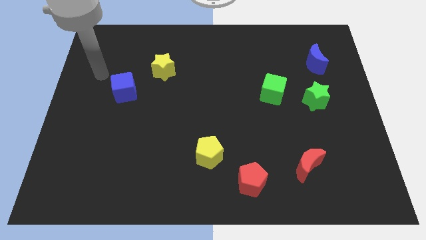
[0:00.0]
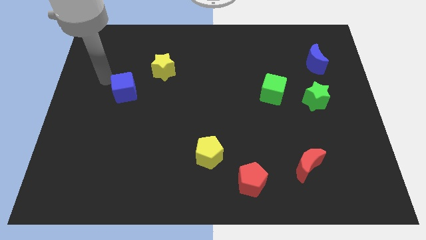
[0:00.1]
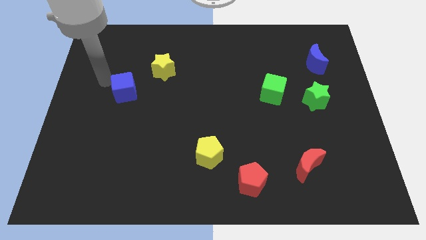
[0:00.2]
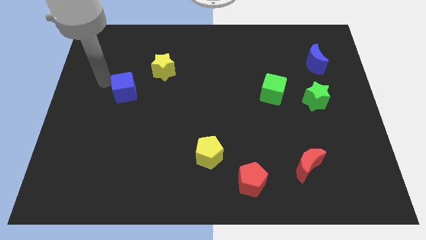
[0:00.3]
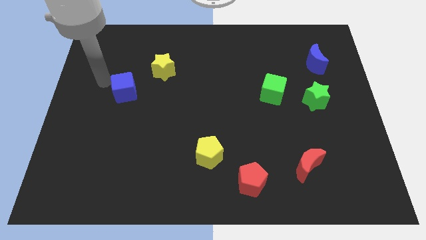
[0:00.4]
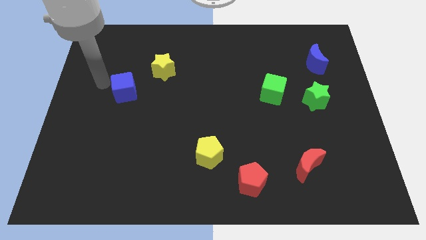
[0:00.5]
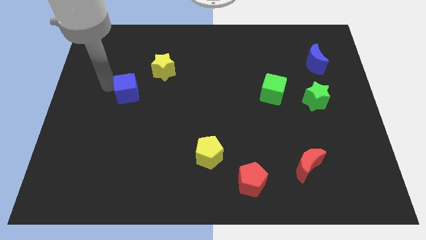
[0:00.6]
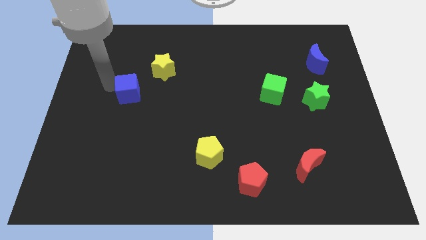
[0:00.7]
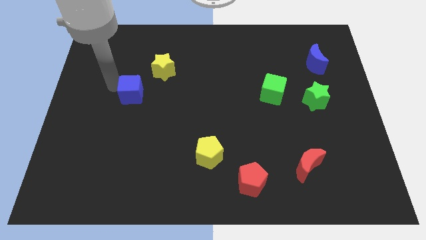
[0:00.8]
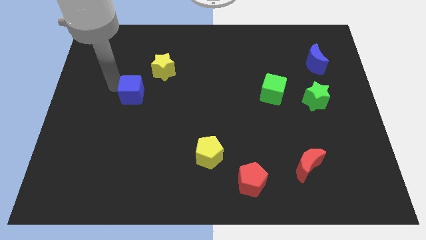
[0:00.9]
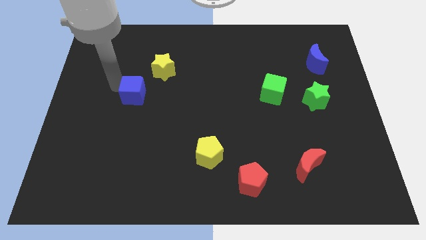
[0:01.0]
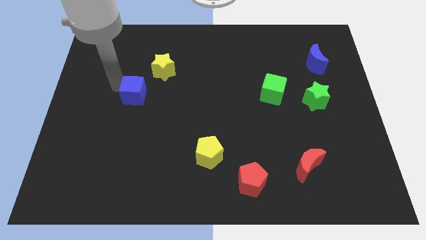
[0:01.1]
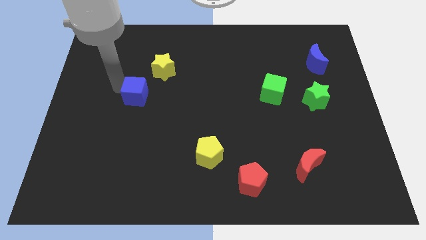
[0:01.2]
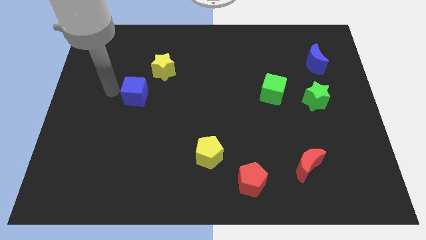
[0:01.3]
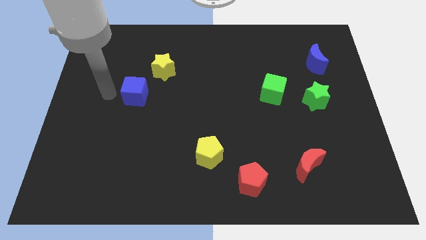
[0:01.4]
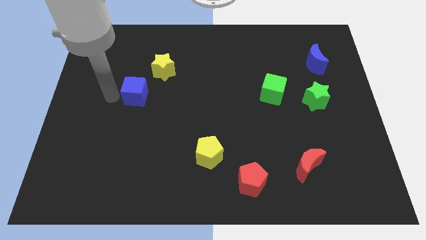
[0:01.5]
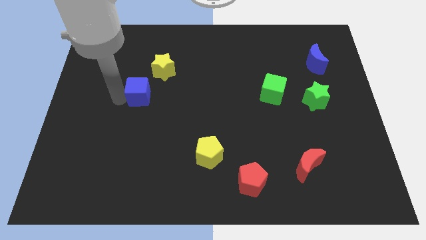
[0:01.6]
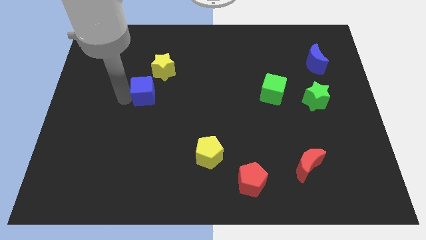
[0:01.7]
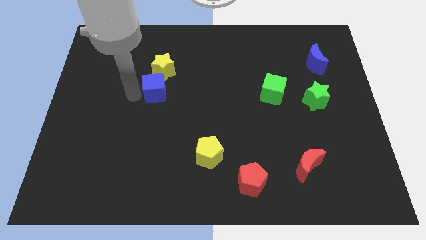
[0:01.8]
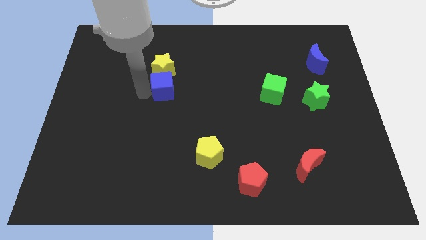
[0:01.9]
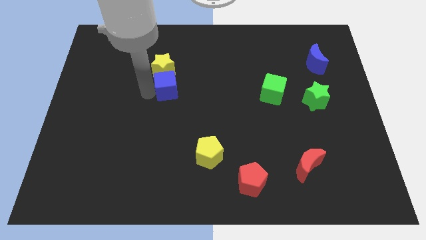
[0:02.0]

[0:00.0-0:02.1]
push blue cube below yellow star

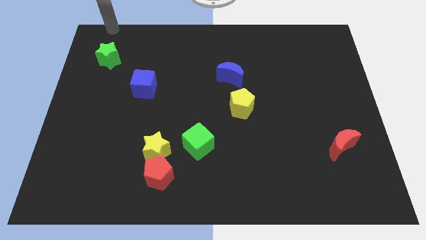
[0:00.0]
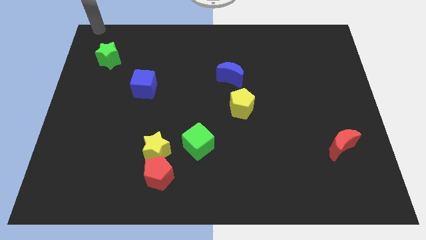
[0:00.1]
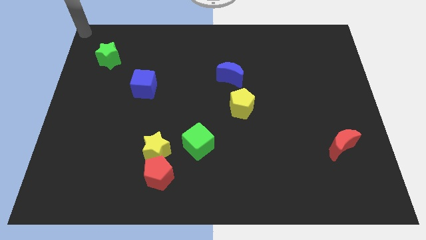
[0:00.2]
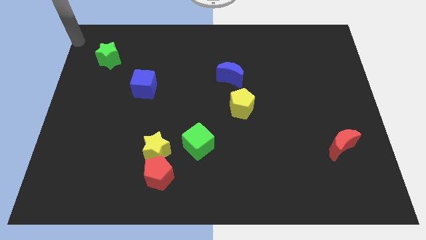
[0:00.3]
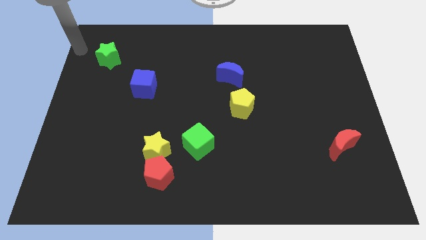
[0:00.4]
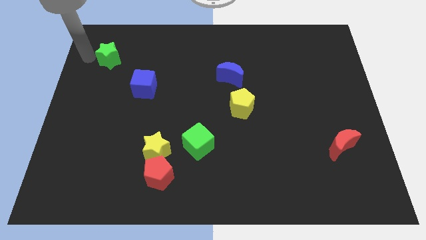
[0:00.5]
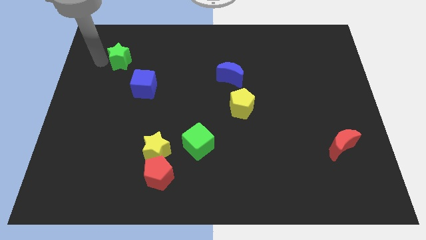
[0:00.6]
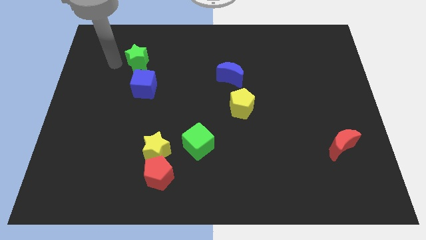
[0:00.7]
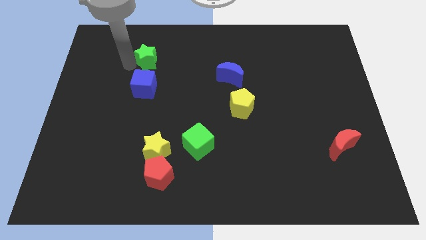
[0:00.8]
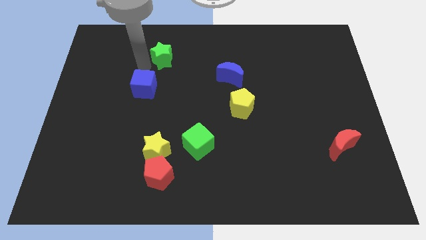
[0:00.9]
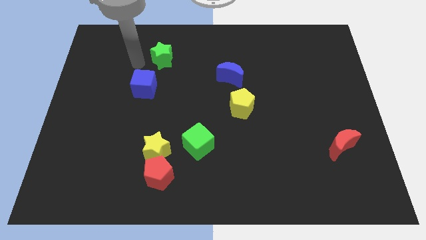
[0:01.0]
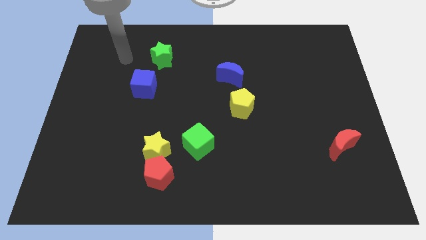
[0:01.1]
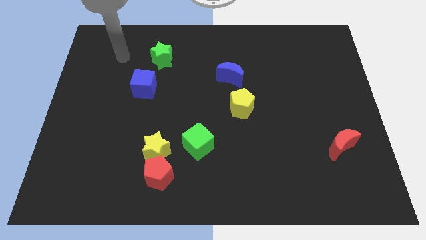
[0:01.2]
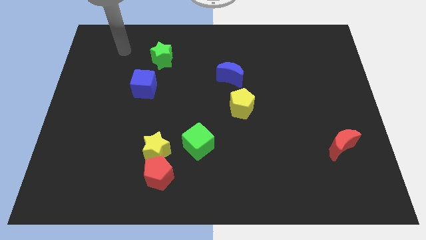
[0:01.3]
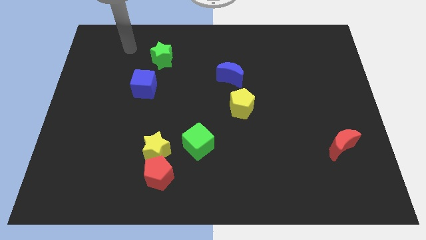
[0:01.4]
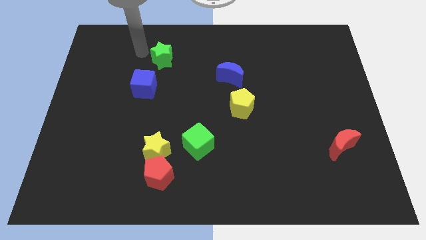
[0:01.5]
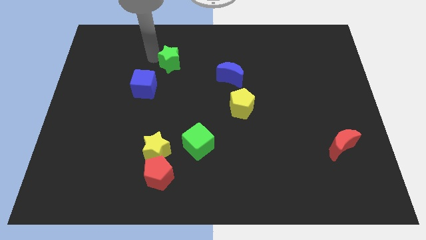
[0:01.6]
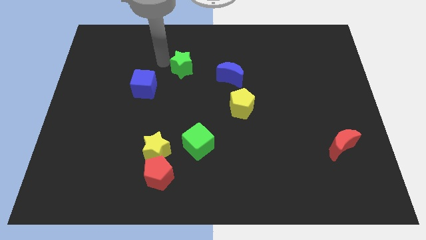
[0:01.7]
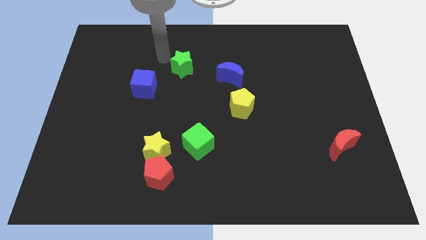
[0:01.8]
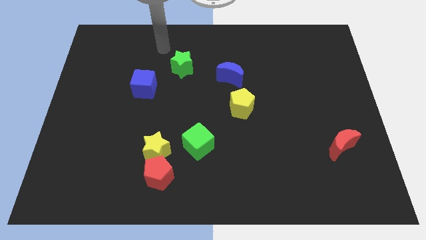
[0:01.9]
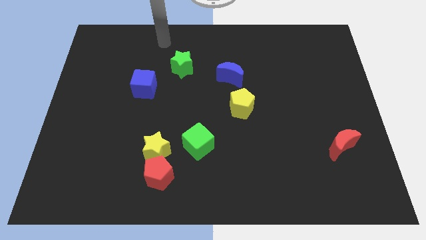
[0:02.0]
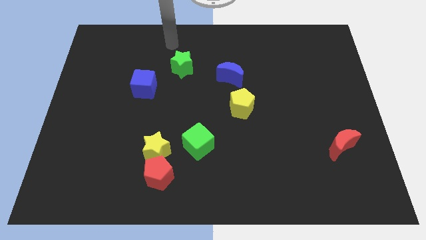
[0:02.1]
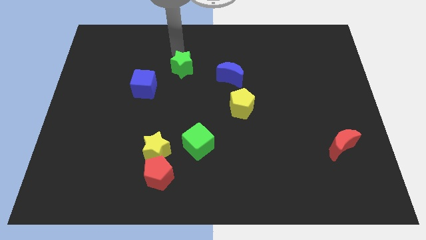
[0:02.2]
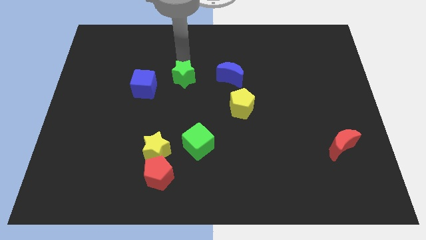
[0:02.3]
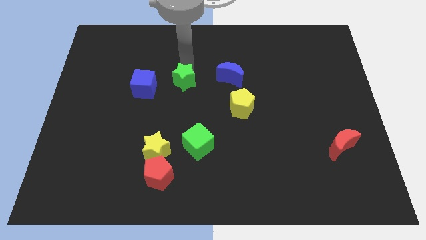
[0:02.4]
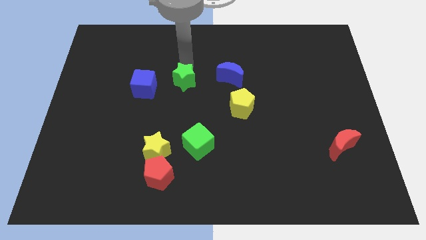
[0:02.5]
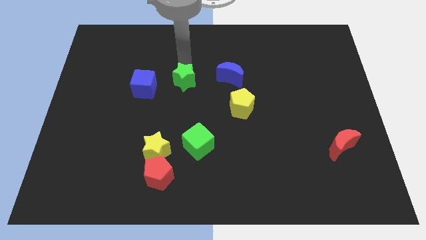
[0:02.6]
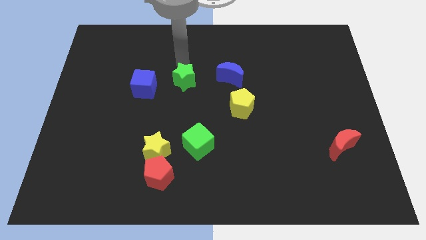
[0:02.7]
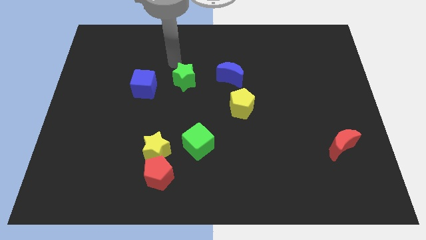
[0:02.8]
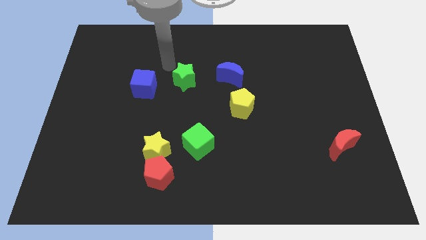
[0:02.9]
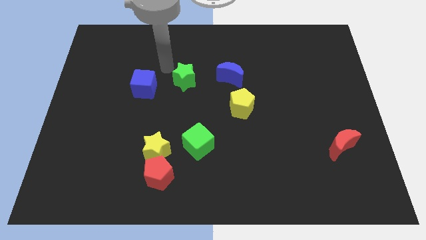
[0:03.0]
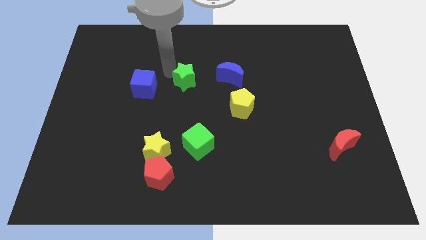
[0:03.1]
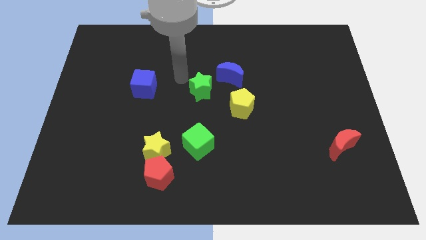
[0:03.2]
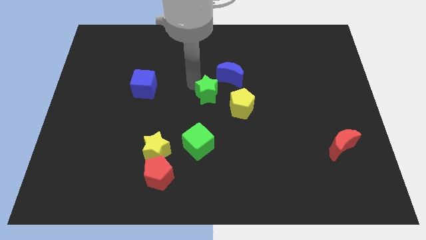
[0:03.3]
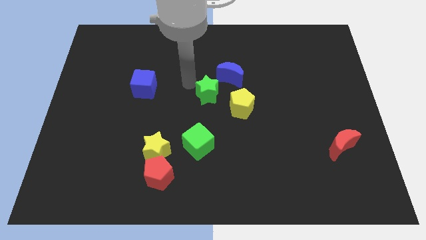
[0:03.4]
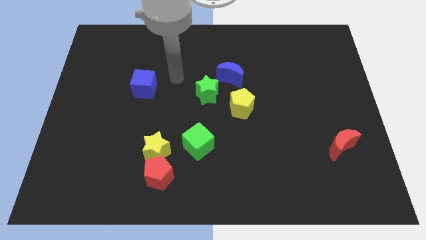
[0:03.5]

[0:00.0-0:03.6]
place the green star at the top of the yellow pentagon

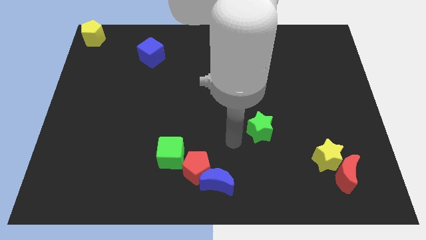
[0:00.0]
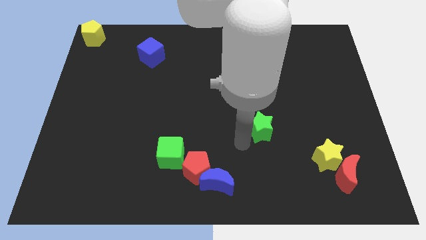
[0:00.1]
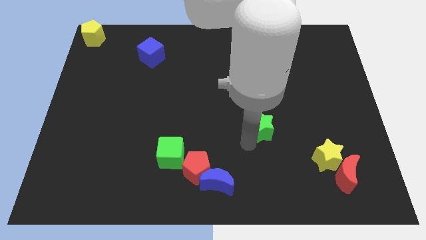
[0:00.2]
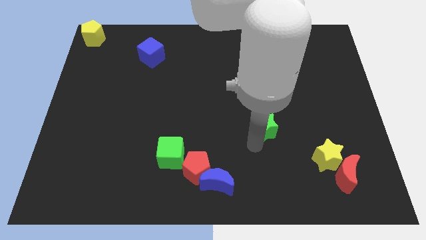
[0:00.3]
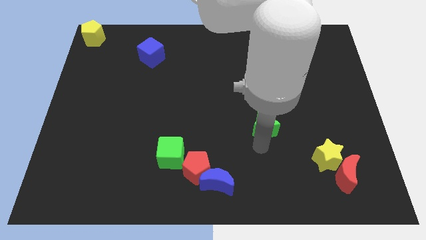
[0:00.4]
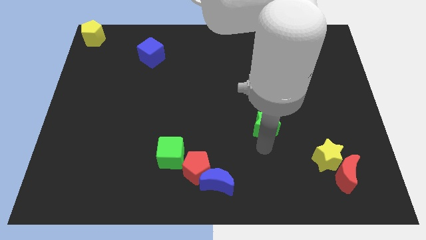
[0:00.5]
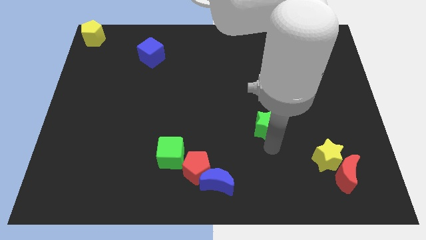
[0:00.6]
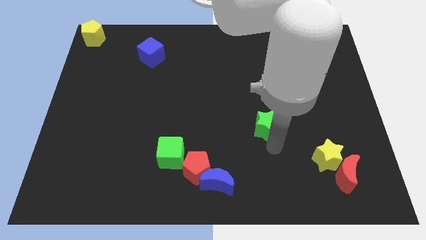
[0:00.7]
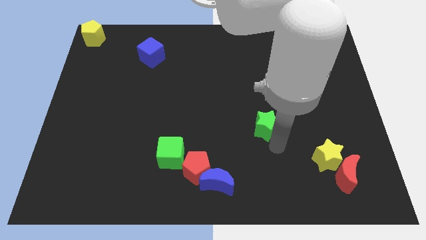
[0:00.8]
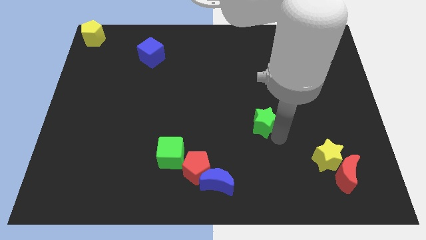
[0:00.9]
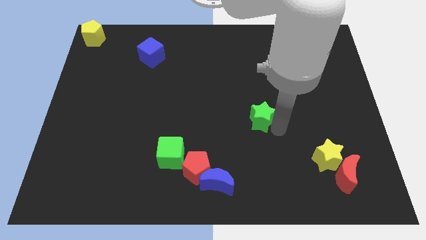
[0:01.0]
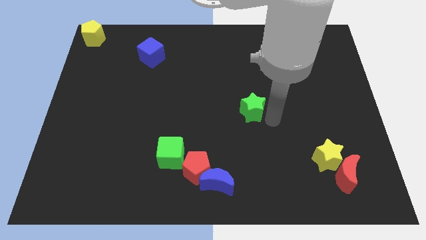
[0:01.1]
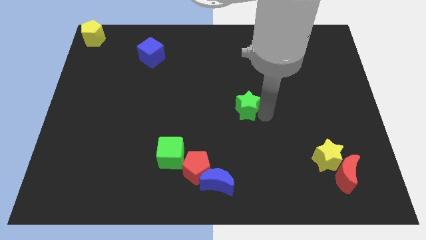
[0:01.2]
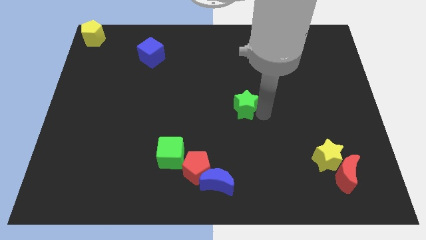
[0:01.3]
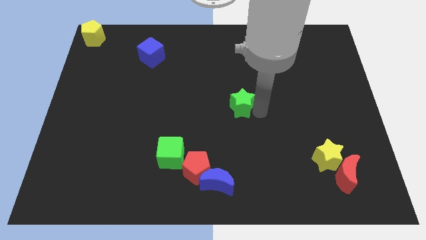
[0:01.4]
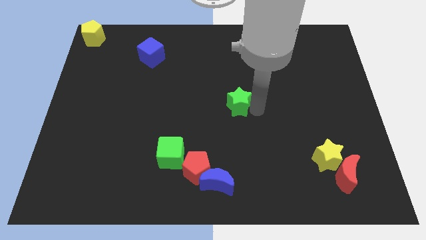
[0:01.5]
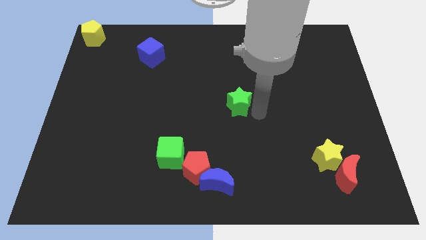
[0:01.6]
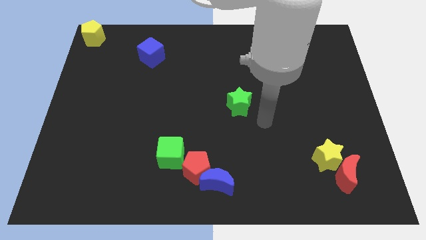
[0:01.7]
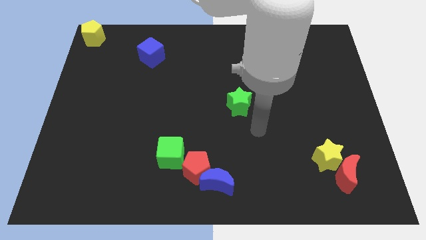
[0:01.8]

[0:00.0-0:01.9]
push the green star towards the top side of the board

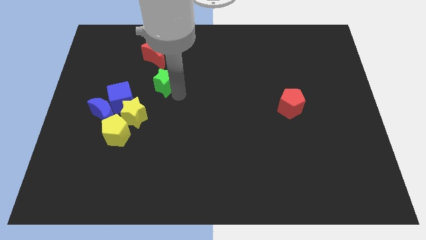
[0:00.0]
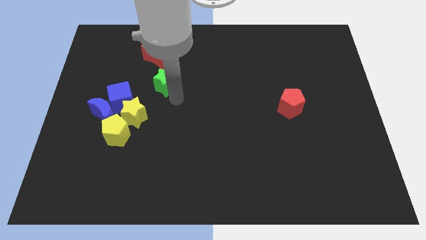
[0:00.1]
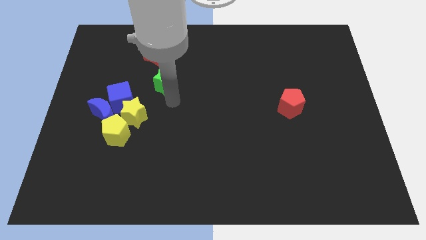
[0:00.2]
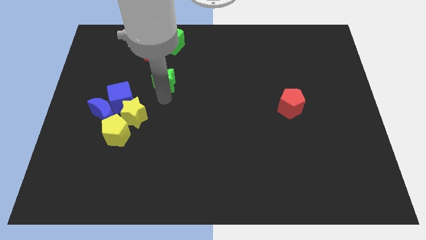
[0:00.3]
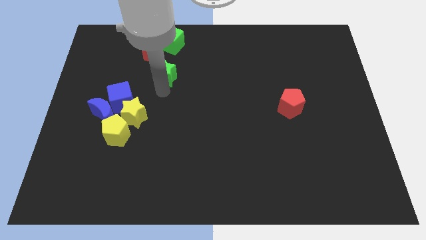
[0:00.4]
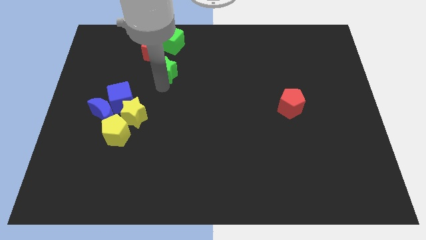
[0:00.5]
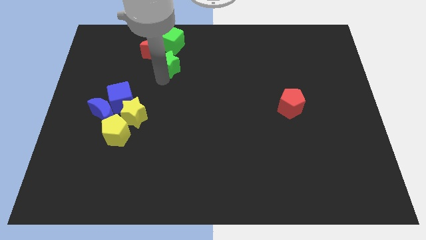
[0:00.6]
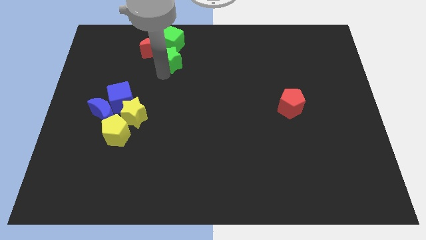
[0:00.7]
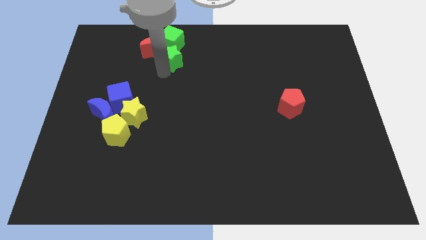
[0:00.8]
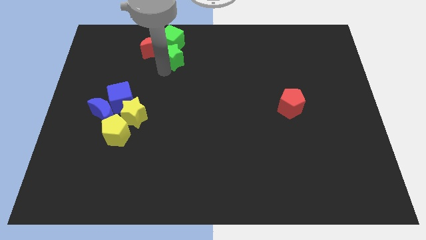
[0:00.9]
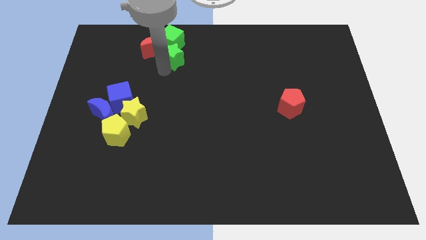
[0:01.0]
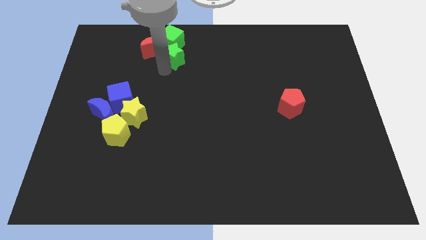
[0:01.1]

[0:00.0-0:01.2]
place the green star below the green cube

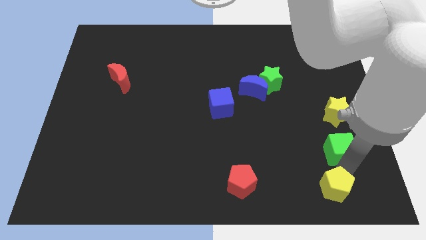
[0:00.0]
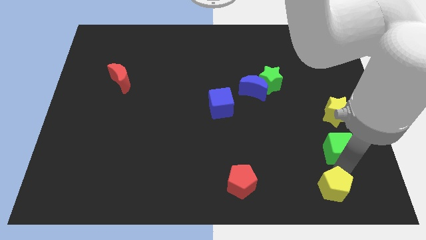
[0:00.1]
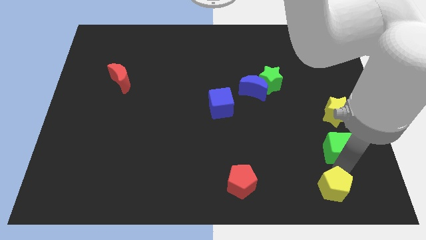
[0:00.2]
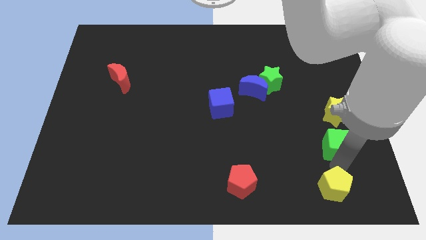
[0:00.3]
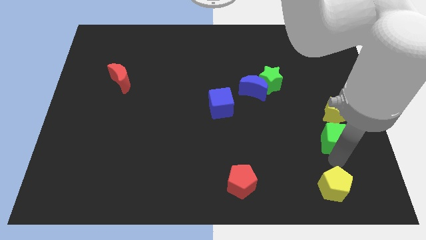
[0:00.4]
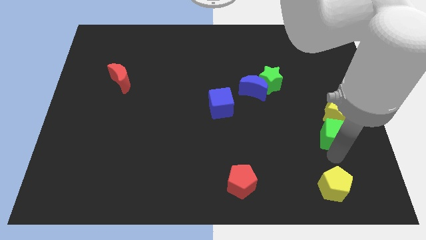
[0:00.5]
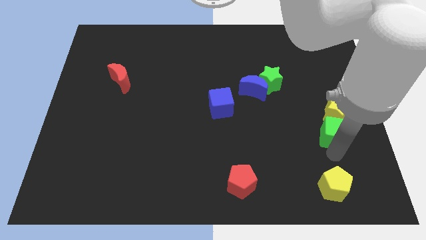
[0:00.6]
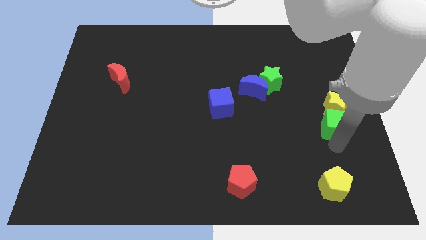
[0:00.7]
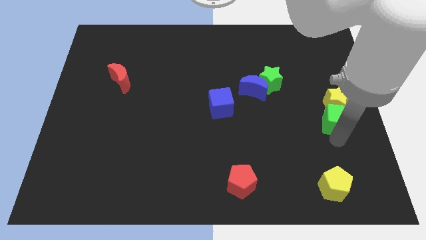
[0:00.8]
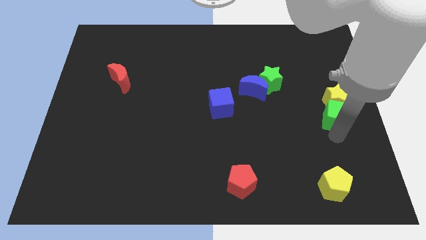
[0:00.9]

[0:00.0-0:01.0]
push green cube into yellow star
